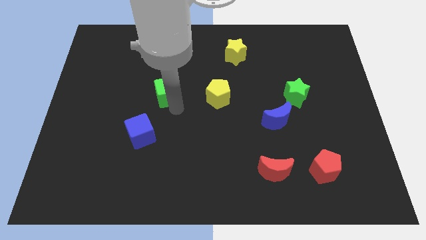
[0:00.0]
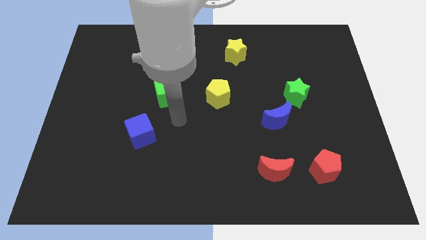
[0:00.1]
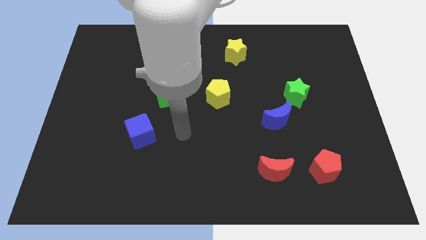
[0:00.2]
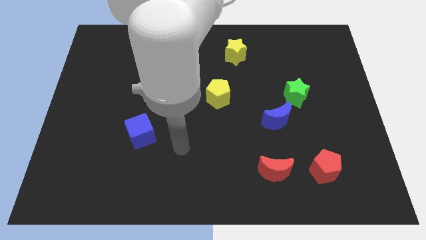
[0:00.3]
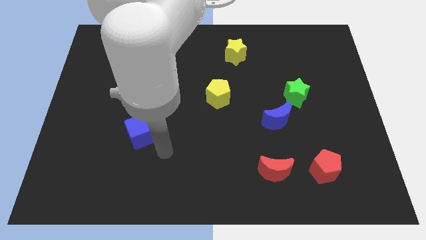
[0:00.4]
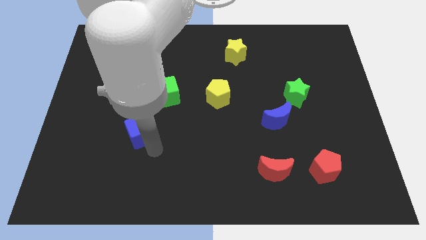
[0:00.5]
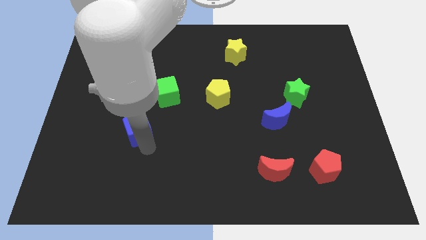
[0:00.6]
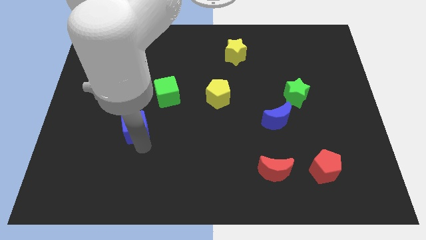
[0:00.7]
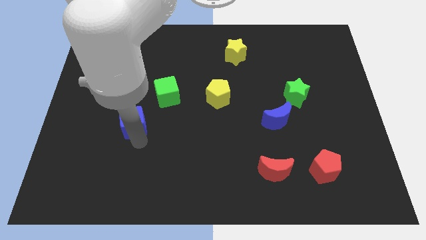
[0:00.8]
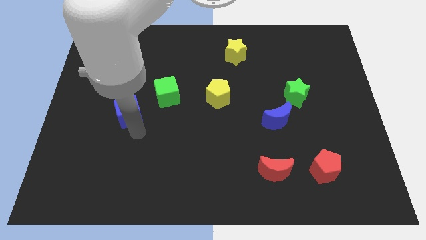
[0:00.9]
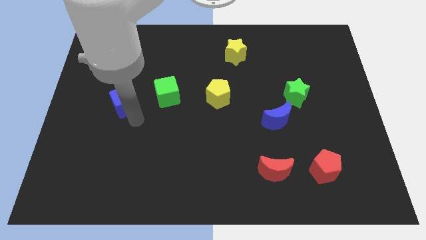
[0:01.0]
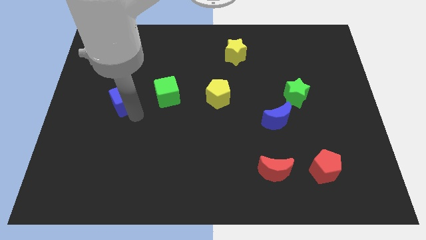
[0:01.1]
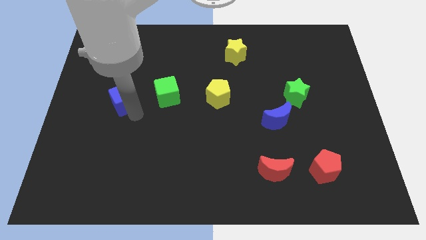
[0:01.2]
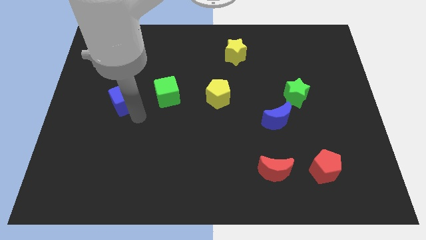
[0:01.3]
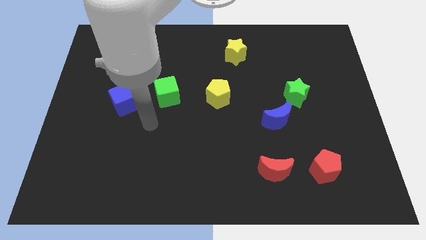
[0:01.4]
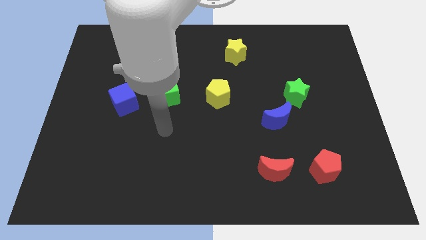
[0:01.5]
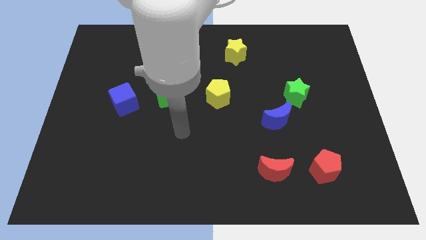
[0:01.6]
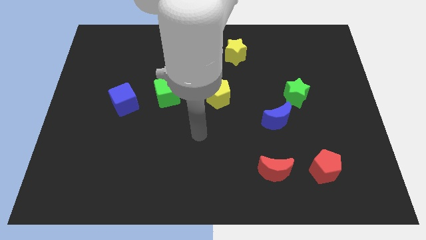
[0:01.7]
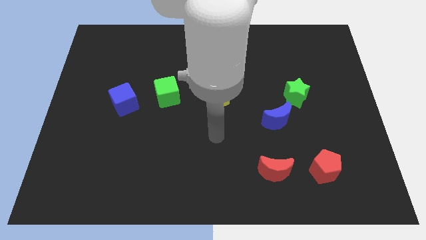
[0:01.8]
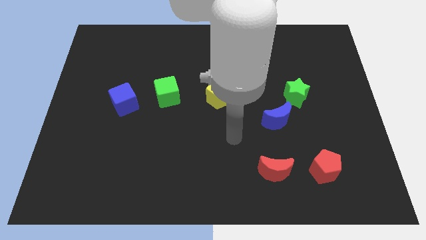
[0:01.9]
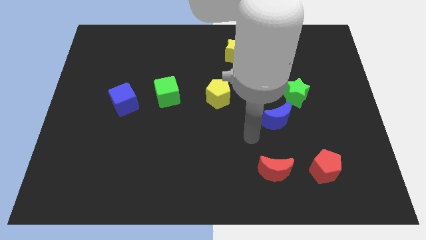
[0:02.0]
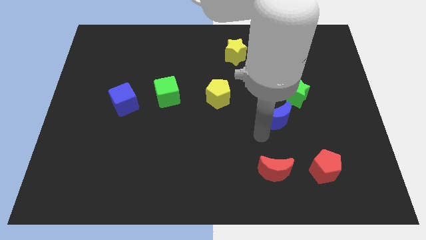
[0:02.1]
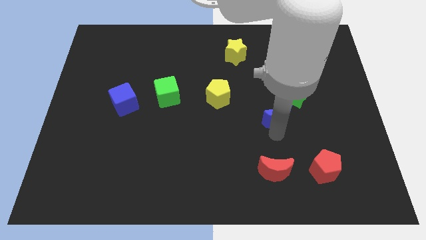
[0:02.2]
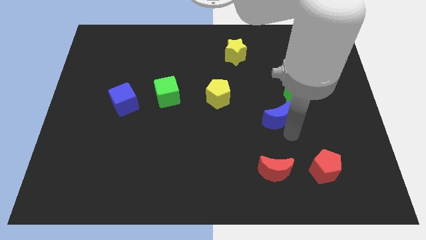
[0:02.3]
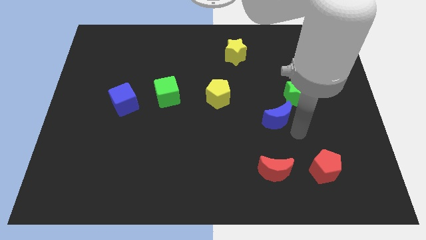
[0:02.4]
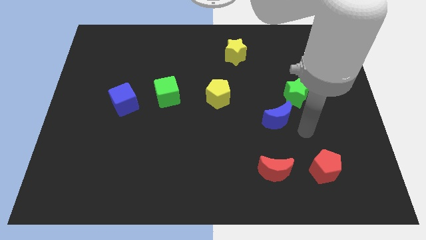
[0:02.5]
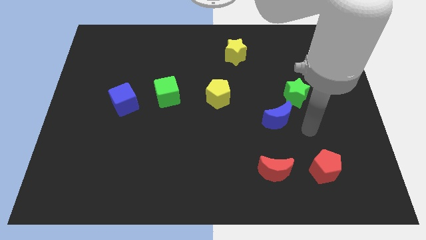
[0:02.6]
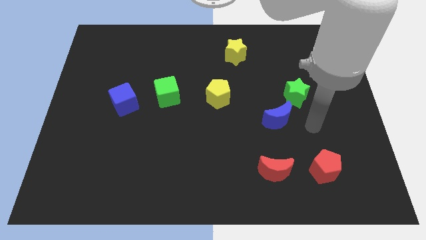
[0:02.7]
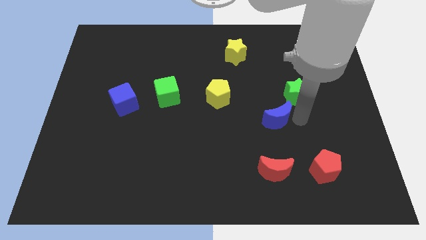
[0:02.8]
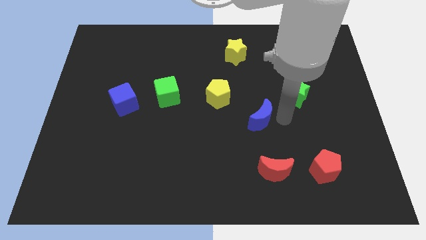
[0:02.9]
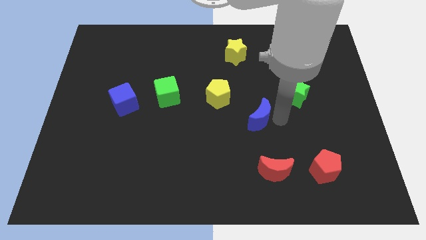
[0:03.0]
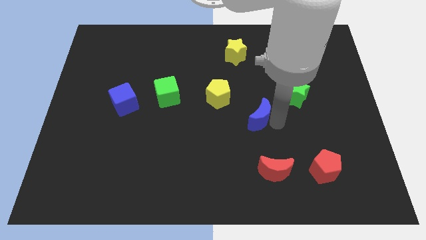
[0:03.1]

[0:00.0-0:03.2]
make both the blue blocks diagonal to each other

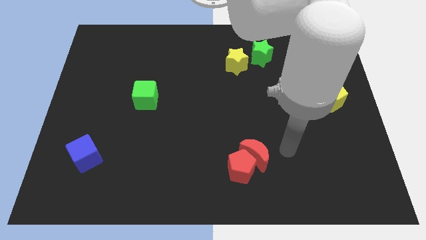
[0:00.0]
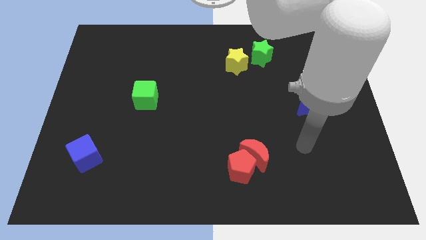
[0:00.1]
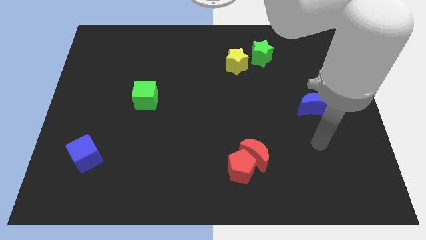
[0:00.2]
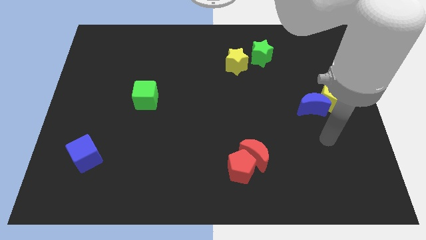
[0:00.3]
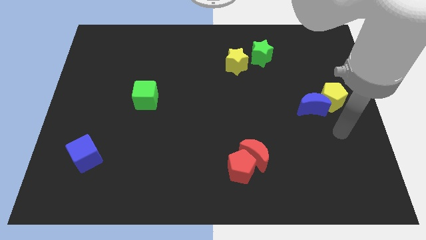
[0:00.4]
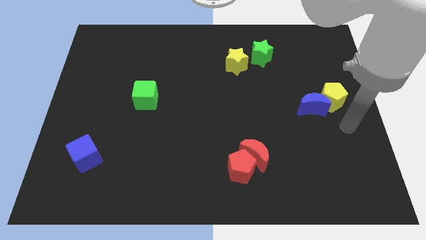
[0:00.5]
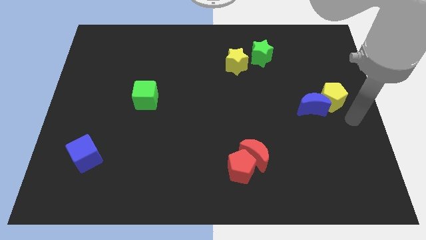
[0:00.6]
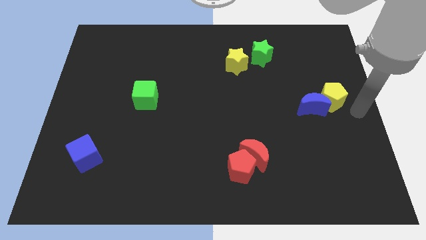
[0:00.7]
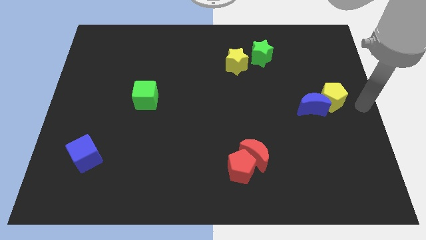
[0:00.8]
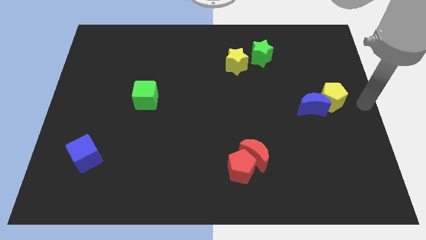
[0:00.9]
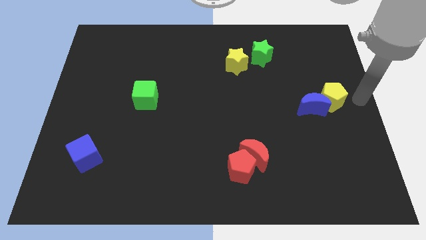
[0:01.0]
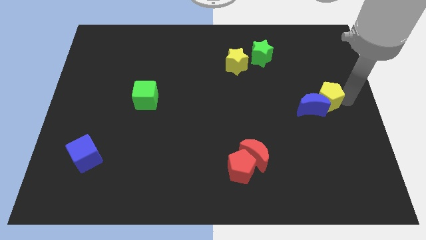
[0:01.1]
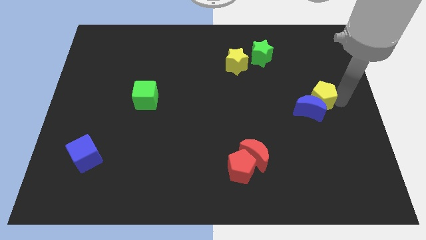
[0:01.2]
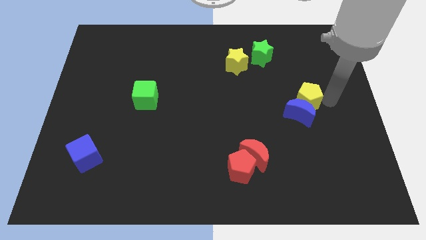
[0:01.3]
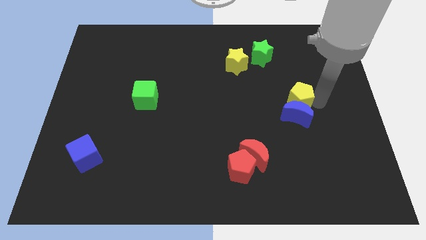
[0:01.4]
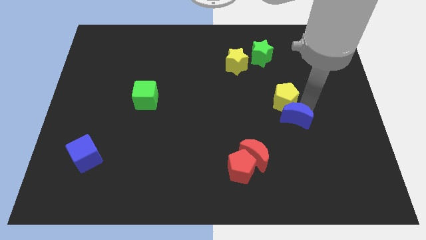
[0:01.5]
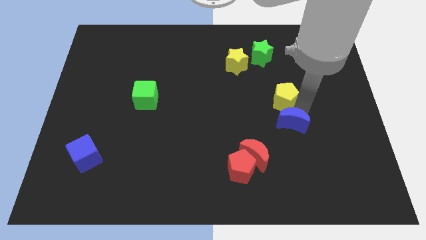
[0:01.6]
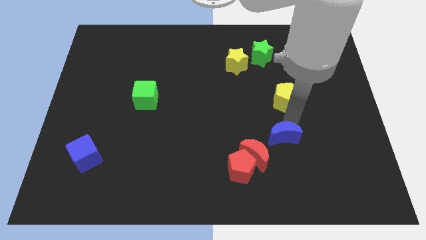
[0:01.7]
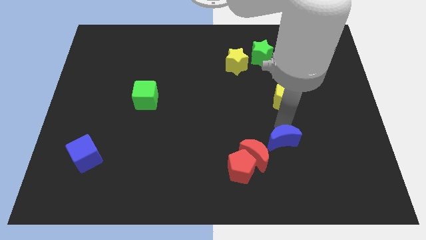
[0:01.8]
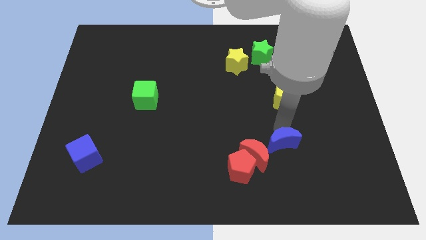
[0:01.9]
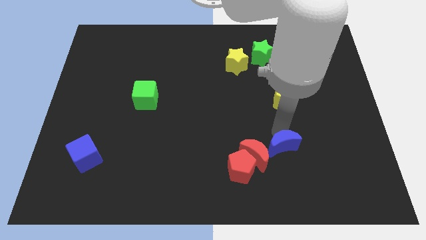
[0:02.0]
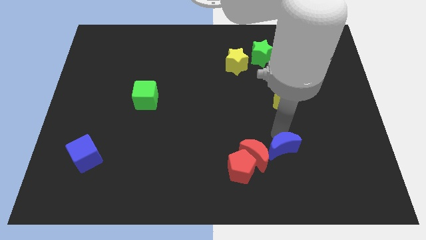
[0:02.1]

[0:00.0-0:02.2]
separate the blue moon and yellow pentagon

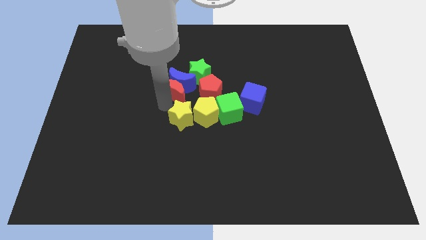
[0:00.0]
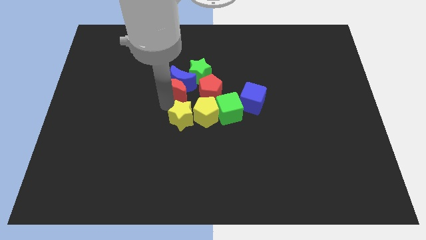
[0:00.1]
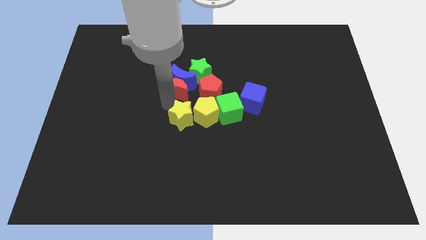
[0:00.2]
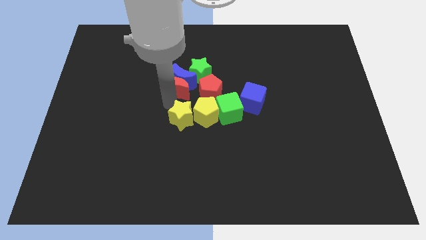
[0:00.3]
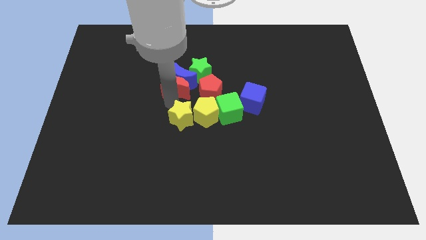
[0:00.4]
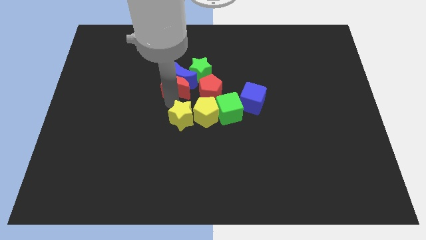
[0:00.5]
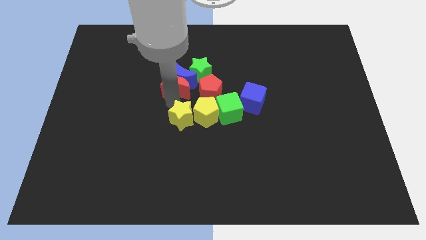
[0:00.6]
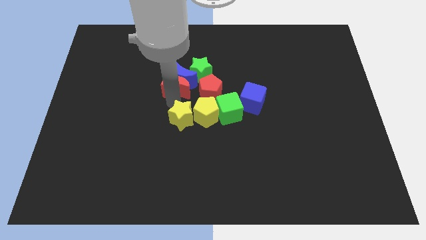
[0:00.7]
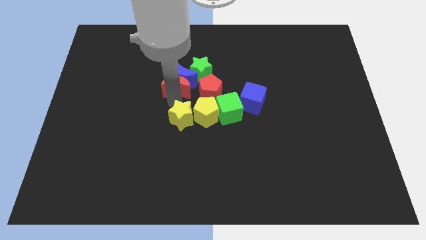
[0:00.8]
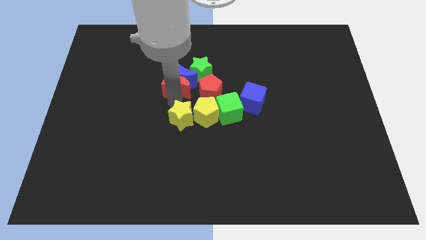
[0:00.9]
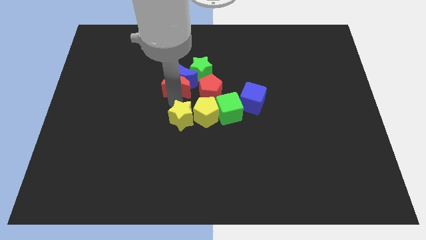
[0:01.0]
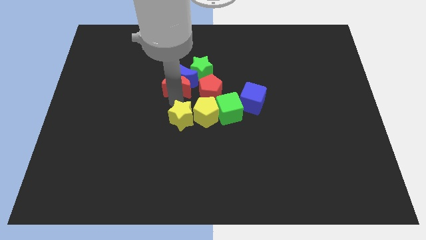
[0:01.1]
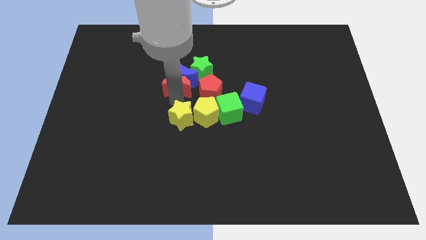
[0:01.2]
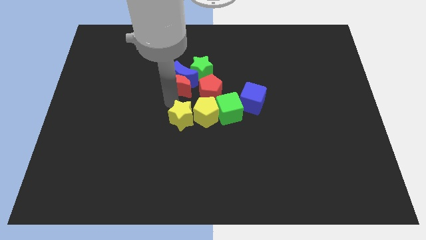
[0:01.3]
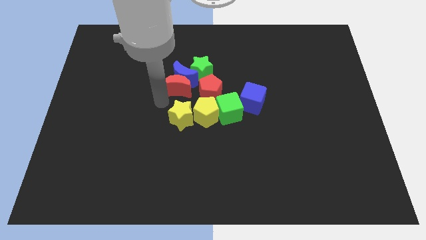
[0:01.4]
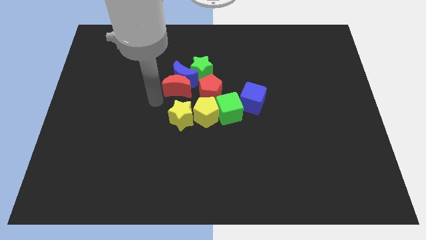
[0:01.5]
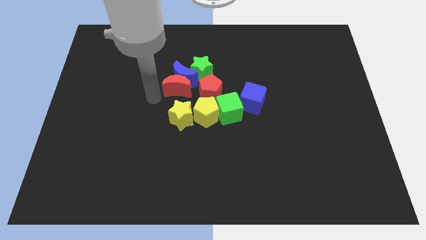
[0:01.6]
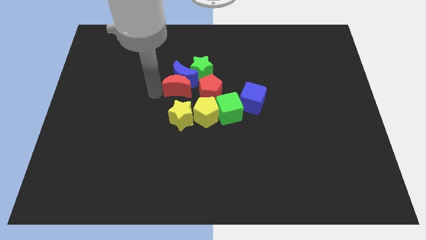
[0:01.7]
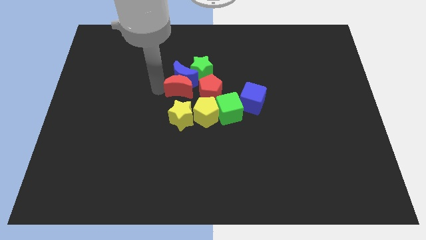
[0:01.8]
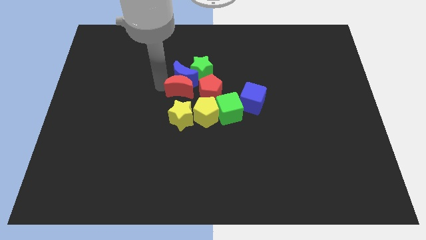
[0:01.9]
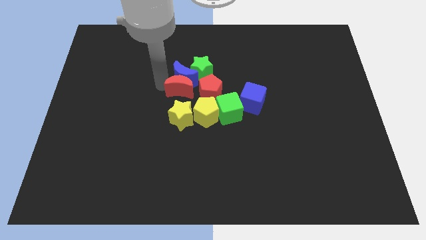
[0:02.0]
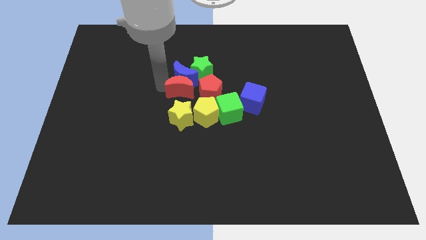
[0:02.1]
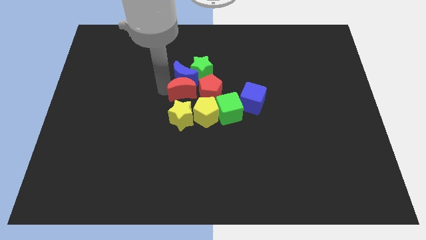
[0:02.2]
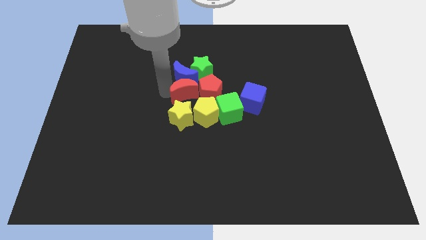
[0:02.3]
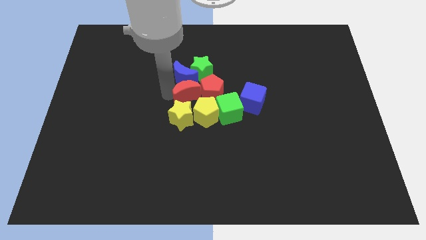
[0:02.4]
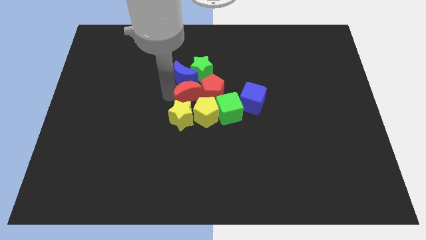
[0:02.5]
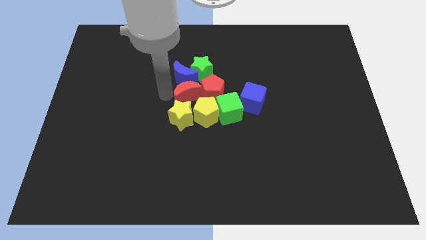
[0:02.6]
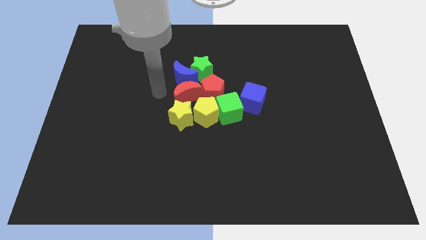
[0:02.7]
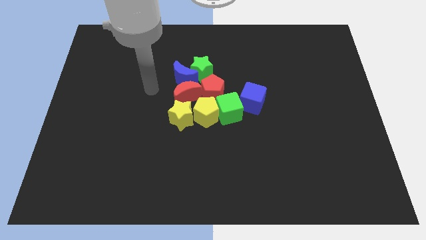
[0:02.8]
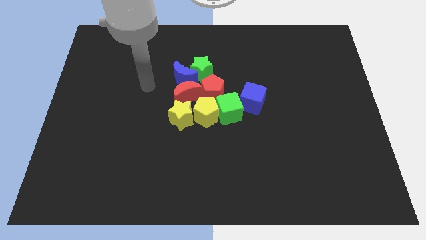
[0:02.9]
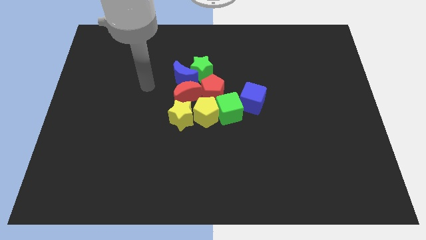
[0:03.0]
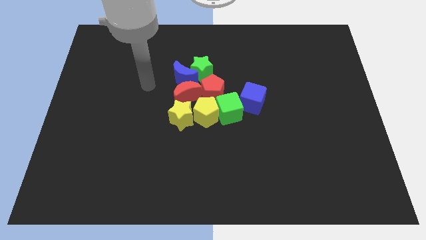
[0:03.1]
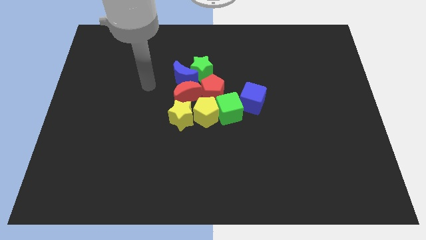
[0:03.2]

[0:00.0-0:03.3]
push your arm on the left center of the board

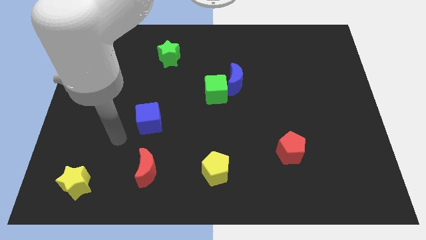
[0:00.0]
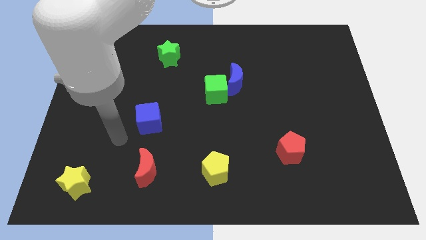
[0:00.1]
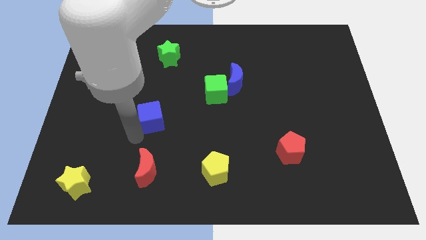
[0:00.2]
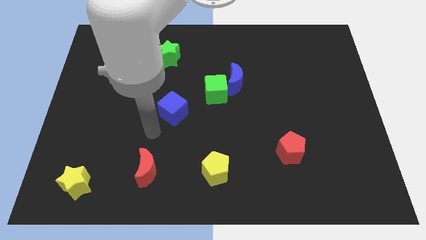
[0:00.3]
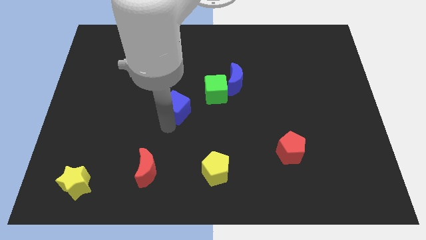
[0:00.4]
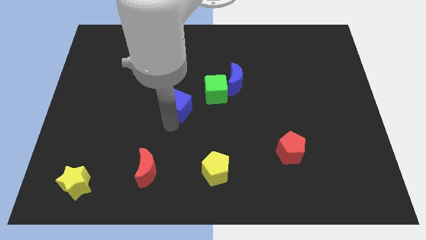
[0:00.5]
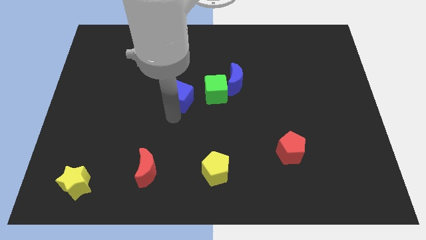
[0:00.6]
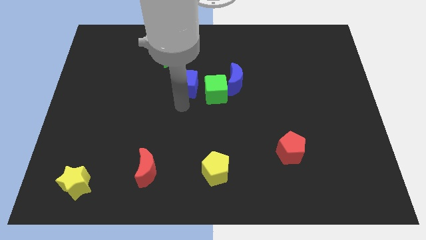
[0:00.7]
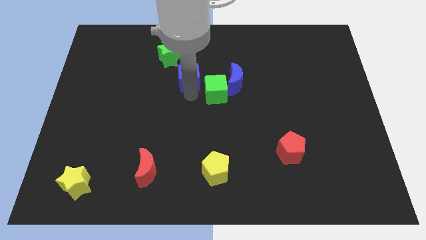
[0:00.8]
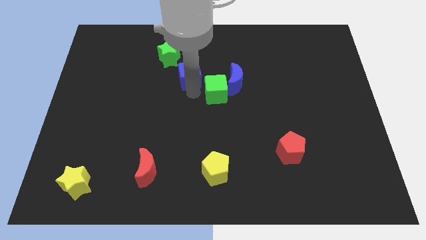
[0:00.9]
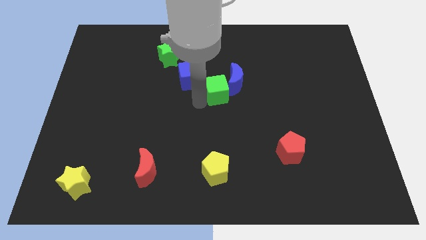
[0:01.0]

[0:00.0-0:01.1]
place the blue cube in diagonal position to the green cube
